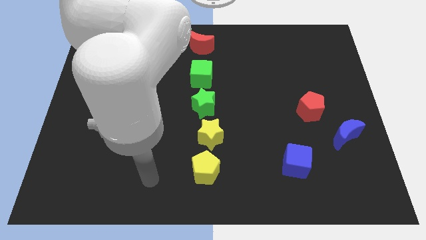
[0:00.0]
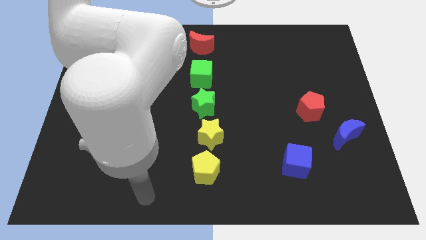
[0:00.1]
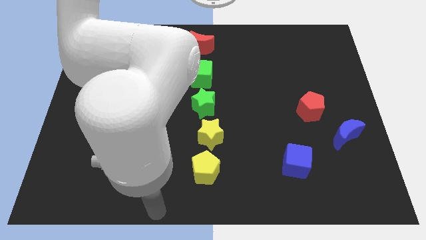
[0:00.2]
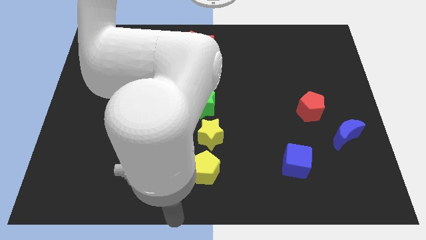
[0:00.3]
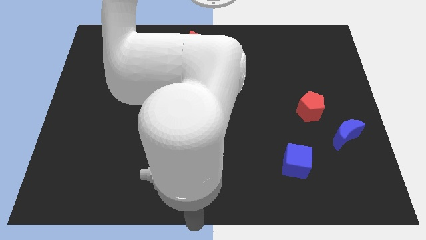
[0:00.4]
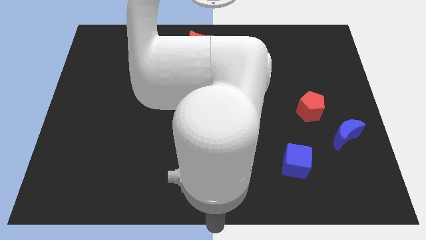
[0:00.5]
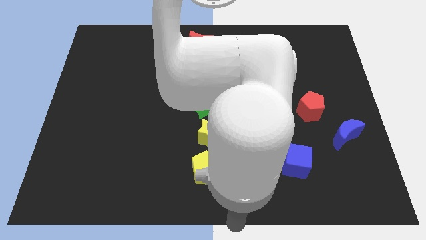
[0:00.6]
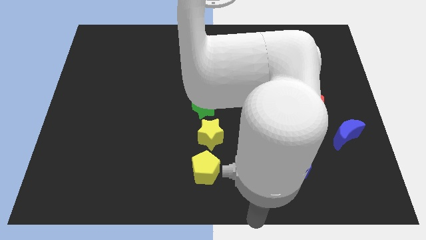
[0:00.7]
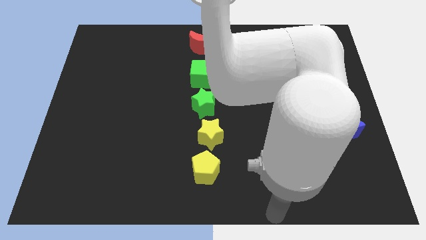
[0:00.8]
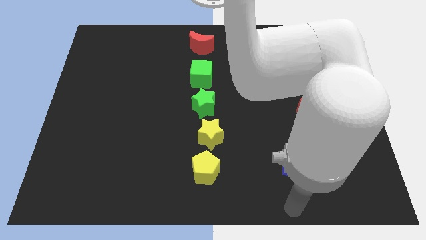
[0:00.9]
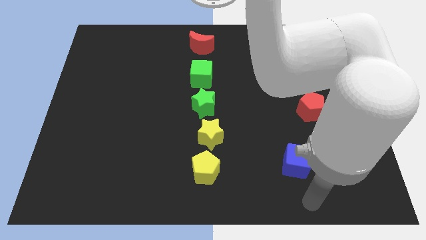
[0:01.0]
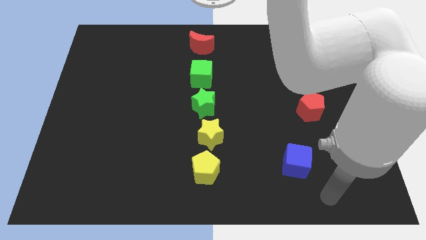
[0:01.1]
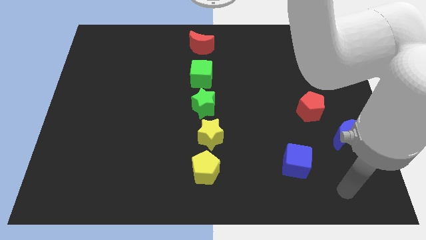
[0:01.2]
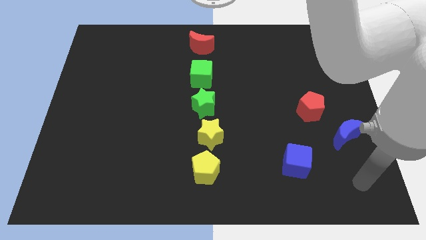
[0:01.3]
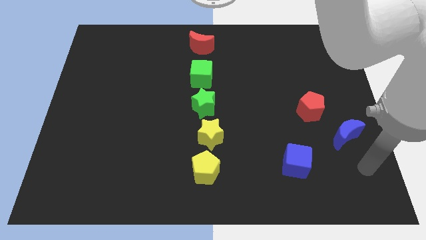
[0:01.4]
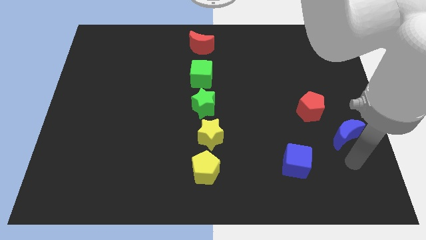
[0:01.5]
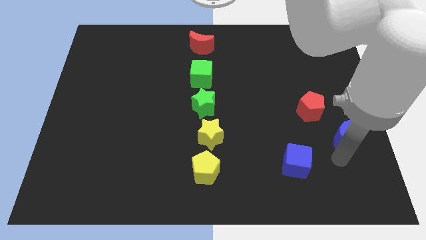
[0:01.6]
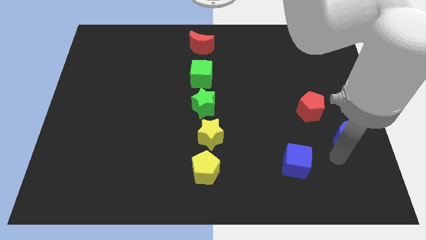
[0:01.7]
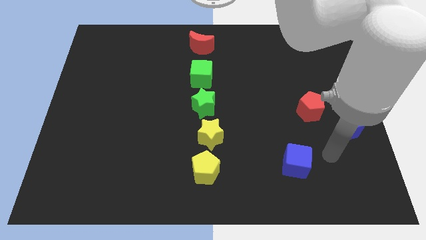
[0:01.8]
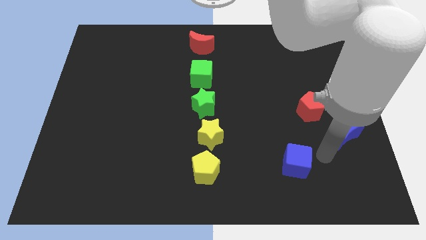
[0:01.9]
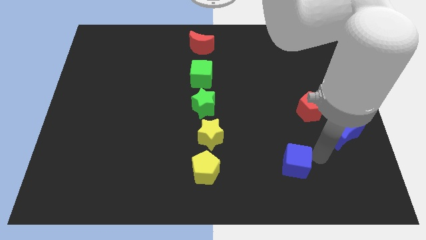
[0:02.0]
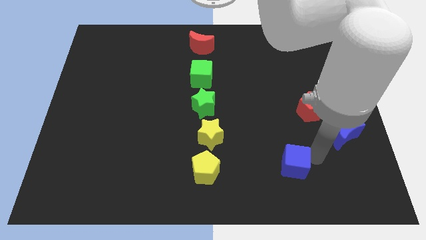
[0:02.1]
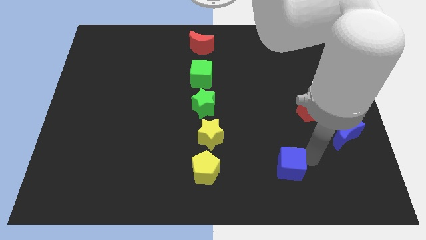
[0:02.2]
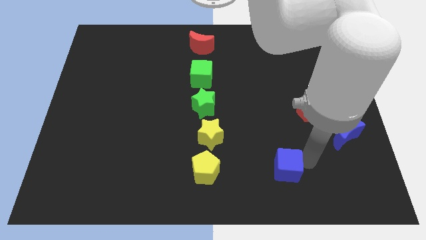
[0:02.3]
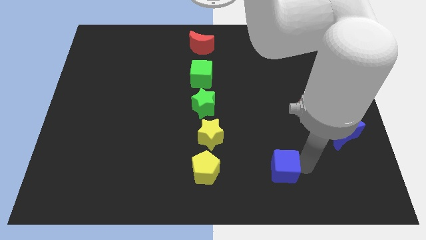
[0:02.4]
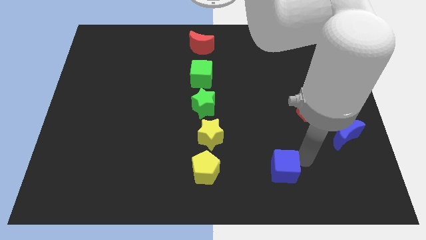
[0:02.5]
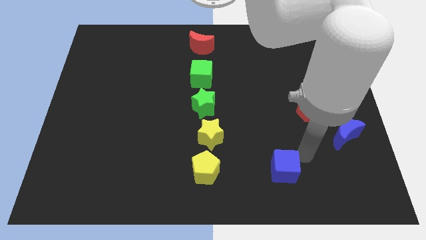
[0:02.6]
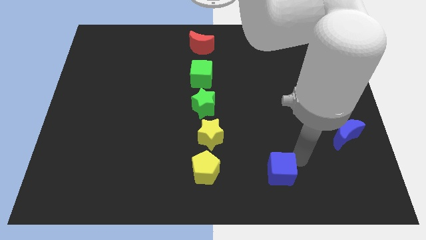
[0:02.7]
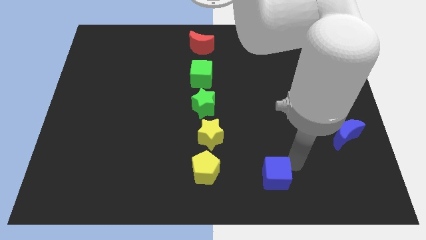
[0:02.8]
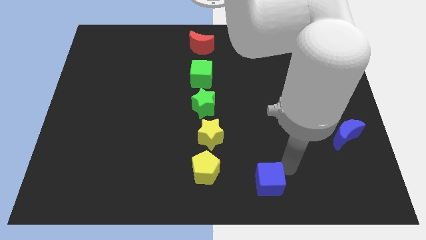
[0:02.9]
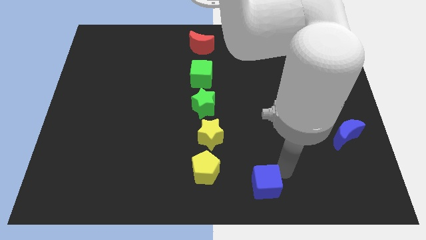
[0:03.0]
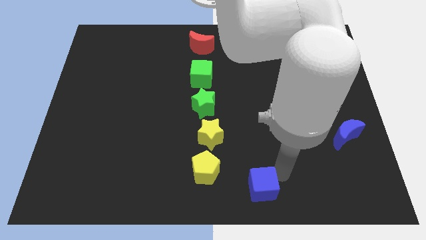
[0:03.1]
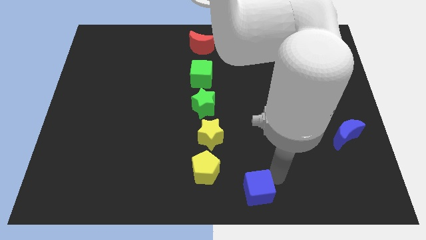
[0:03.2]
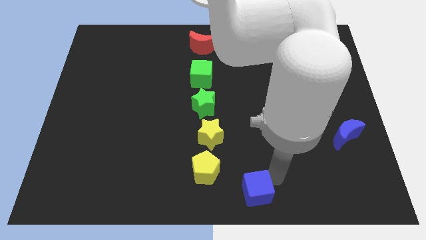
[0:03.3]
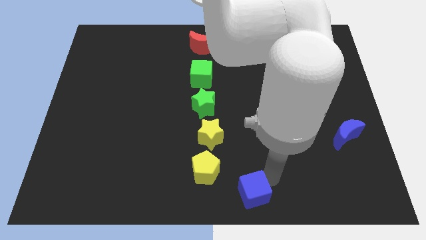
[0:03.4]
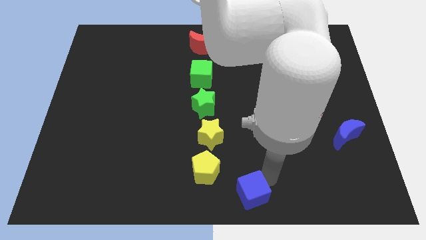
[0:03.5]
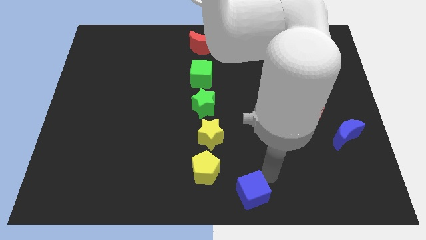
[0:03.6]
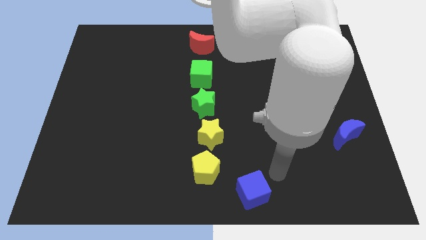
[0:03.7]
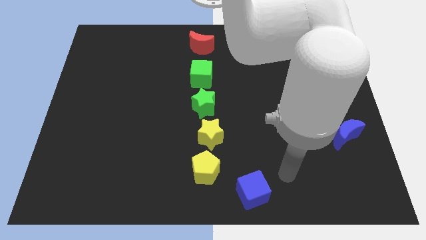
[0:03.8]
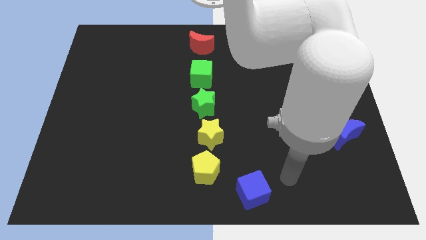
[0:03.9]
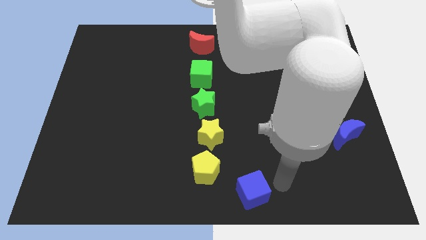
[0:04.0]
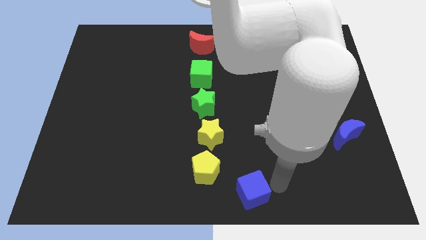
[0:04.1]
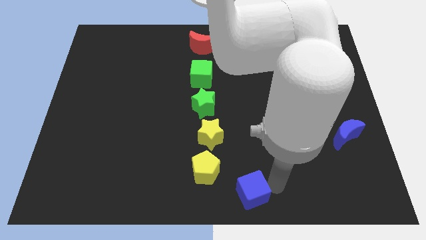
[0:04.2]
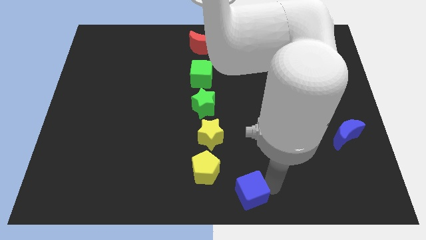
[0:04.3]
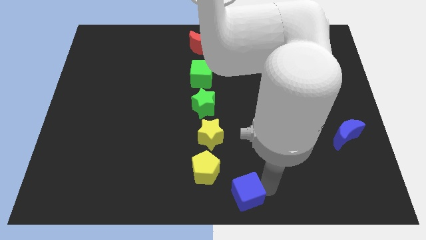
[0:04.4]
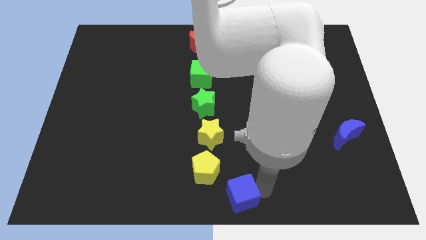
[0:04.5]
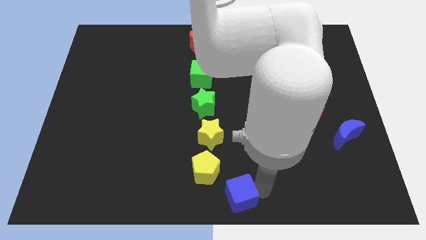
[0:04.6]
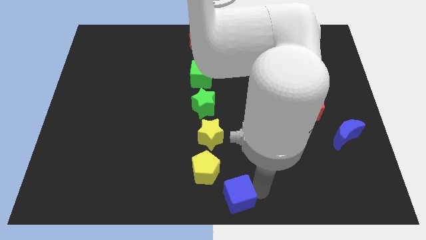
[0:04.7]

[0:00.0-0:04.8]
push the blue cube in bottom center of the board

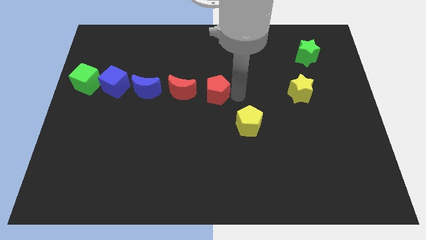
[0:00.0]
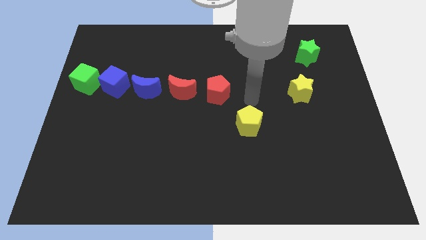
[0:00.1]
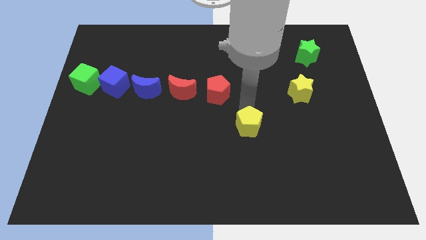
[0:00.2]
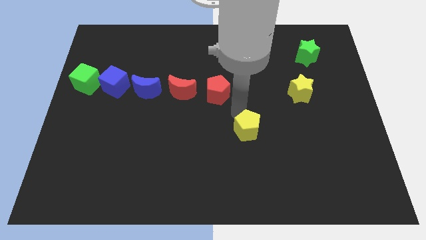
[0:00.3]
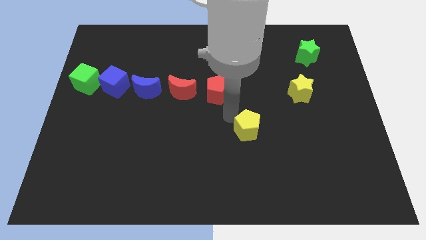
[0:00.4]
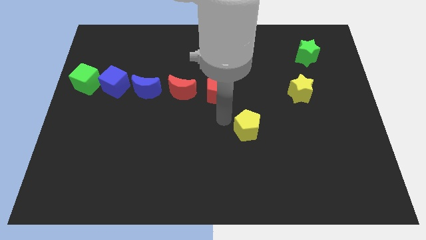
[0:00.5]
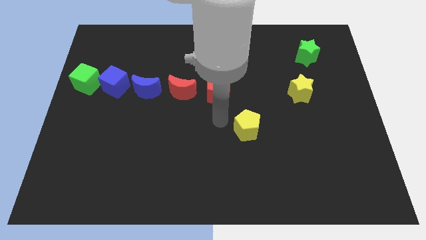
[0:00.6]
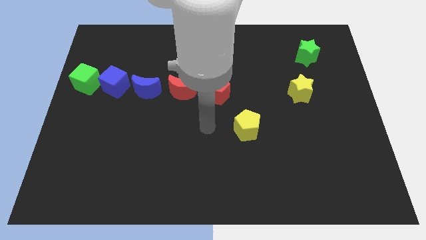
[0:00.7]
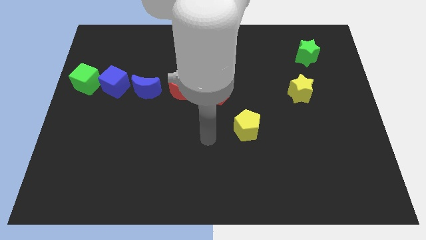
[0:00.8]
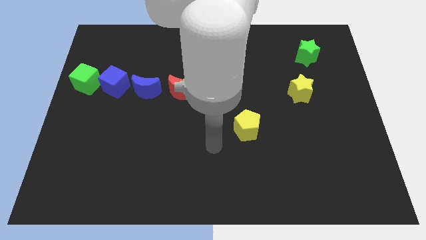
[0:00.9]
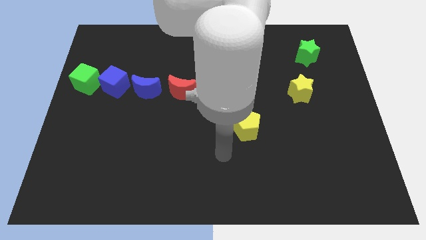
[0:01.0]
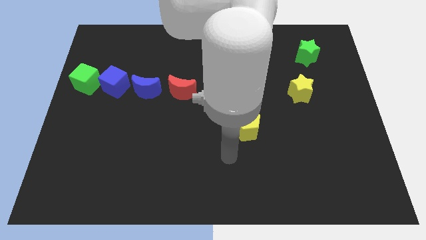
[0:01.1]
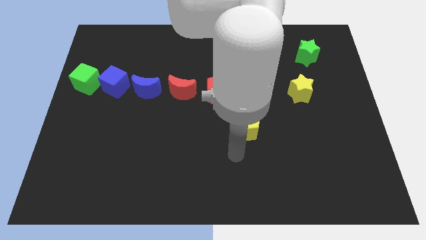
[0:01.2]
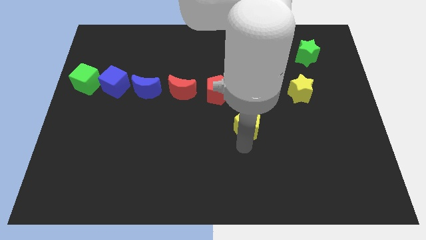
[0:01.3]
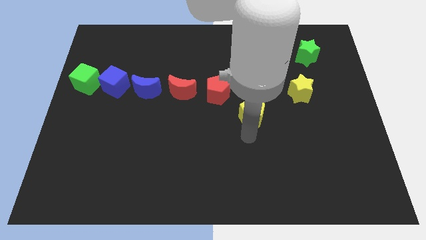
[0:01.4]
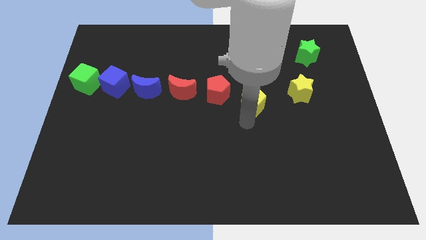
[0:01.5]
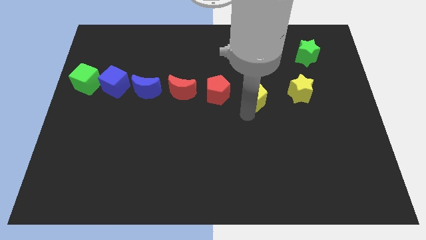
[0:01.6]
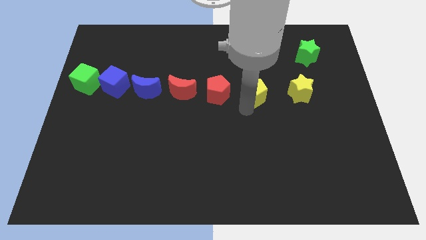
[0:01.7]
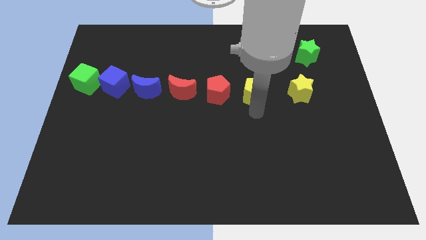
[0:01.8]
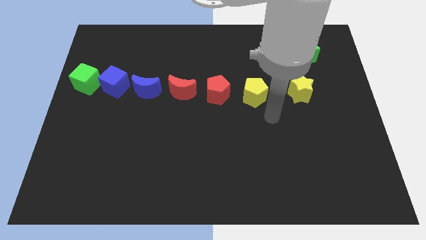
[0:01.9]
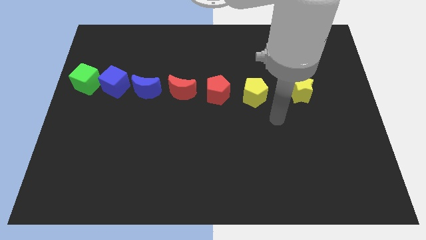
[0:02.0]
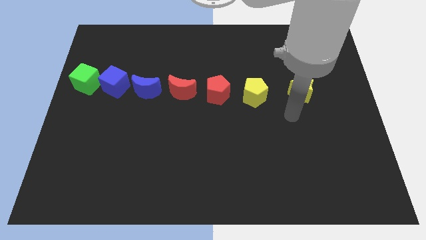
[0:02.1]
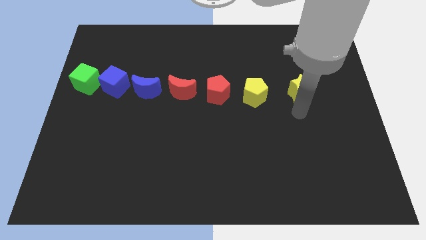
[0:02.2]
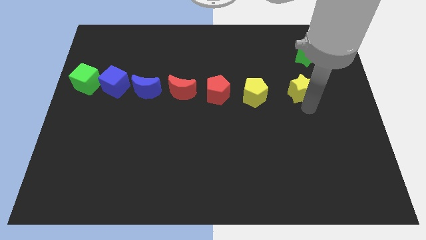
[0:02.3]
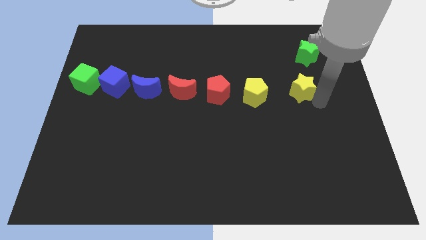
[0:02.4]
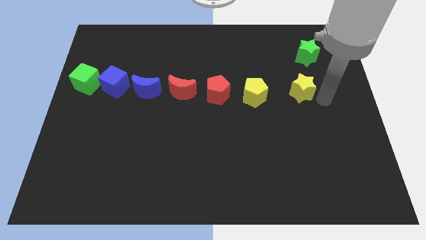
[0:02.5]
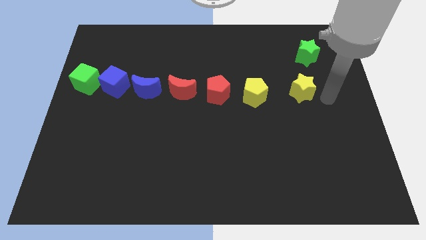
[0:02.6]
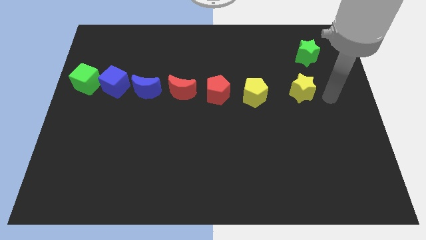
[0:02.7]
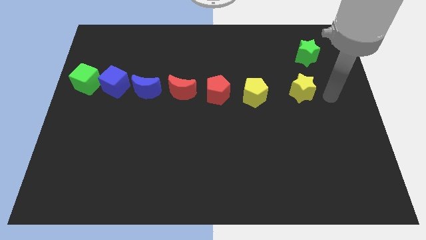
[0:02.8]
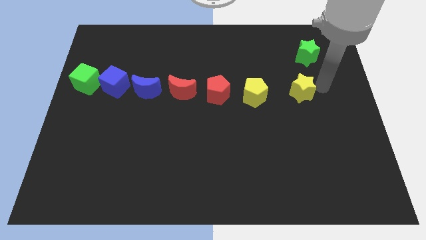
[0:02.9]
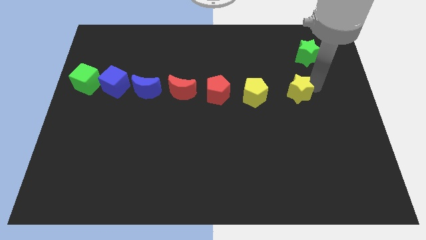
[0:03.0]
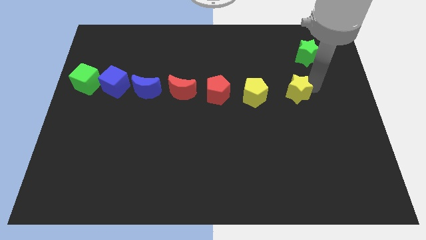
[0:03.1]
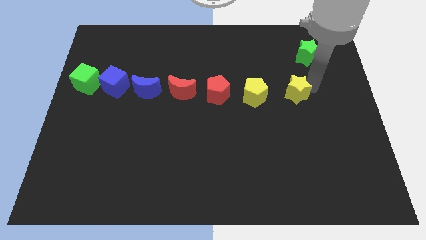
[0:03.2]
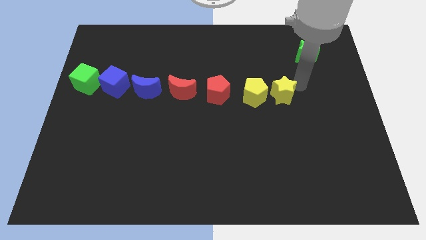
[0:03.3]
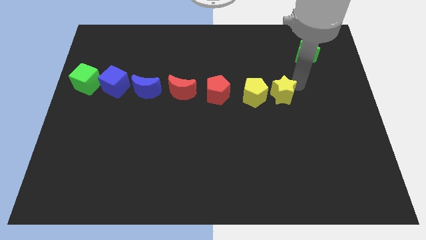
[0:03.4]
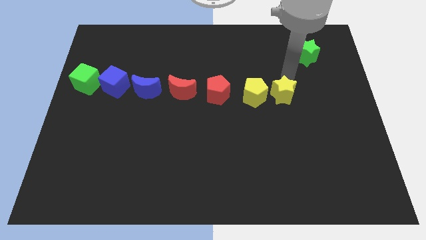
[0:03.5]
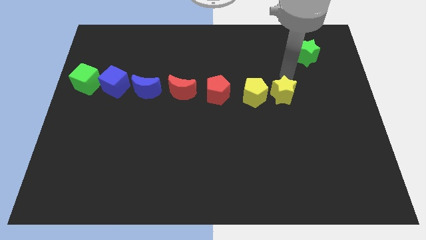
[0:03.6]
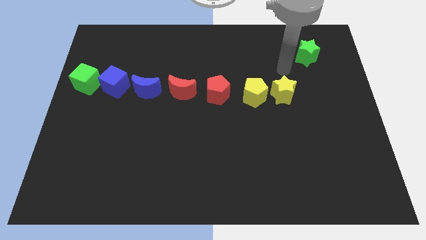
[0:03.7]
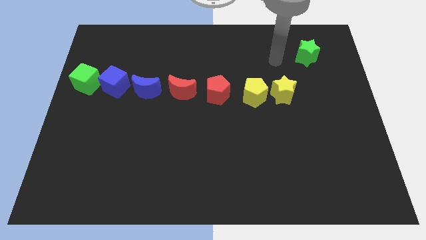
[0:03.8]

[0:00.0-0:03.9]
move the yellow blocks to the right side of the red pentagon
